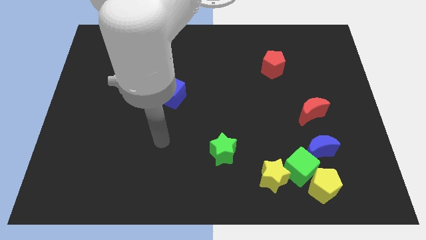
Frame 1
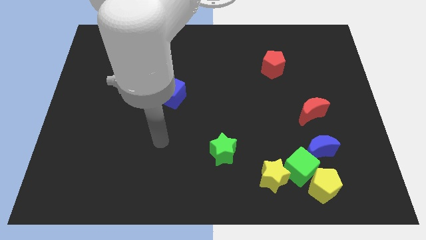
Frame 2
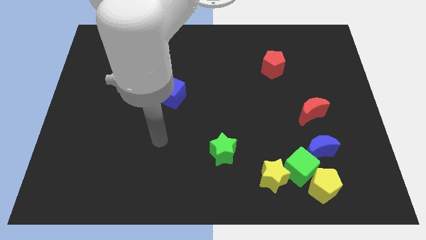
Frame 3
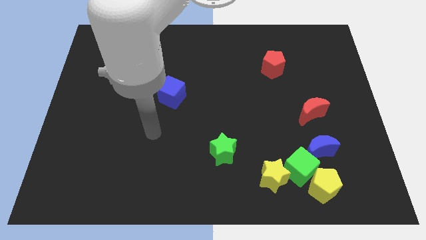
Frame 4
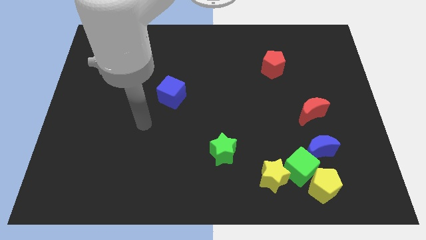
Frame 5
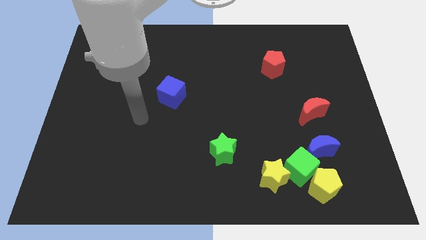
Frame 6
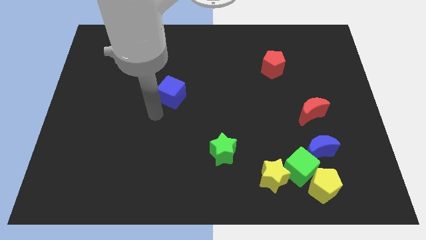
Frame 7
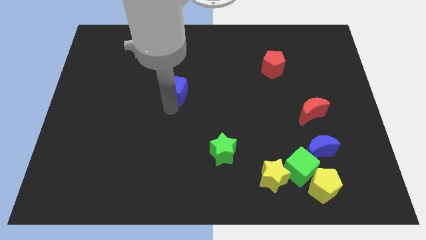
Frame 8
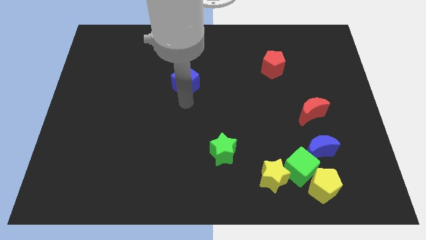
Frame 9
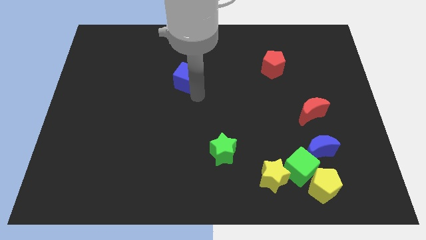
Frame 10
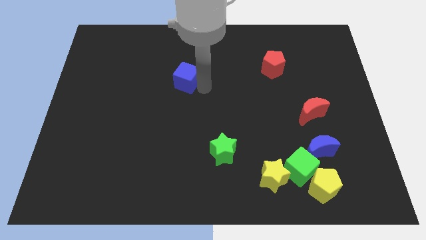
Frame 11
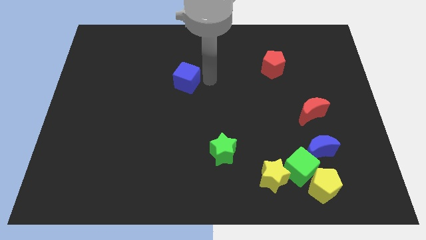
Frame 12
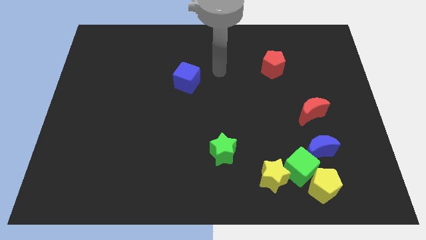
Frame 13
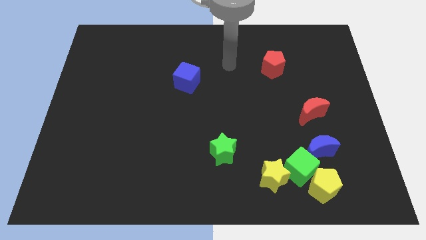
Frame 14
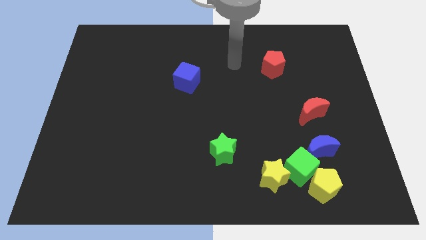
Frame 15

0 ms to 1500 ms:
push the blue cube slightly upwards

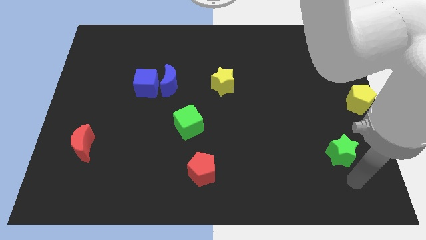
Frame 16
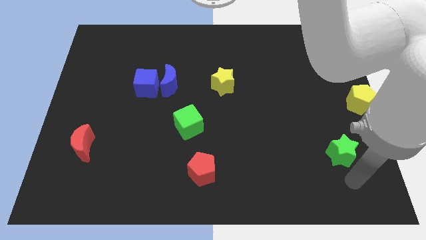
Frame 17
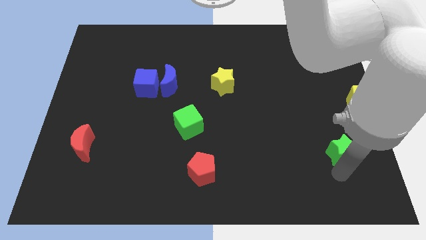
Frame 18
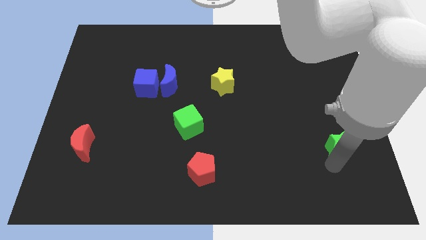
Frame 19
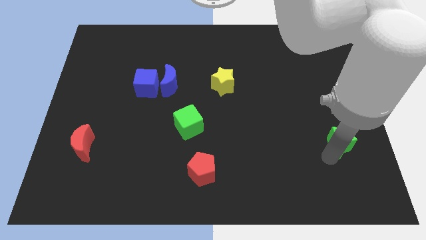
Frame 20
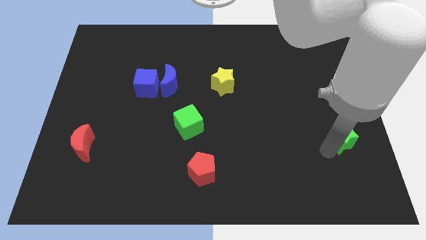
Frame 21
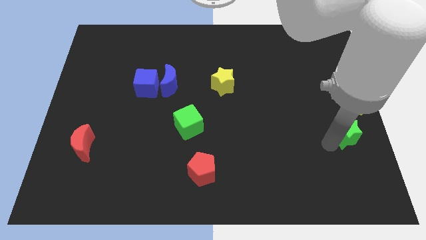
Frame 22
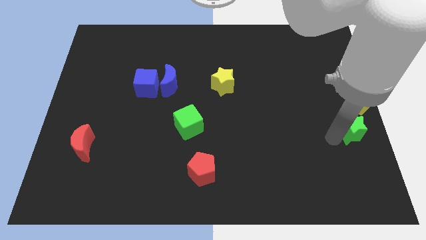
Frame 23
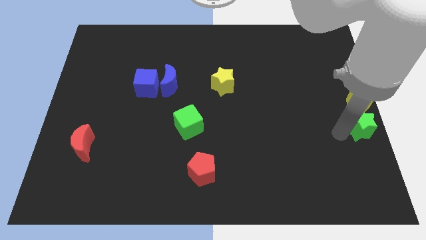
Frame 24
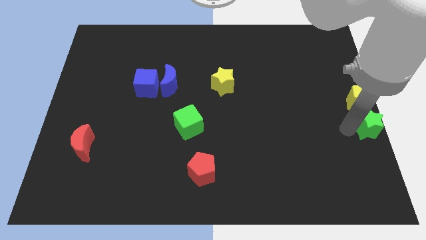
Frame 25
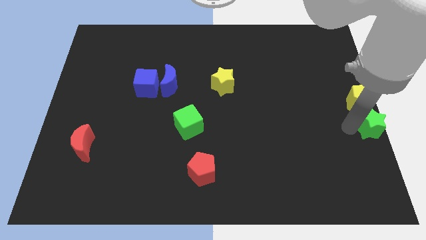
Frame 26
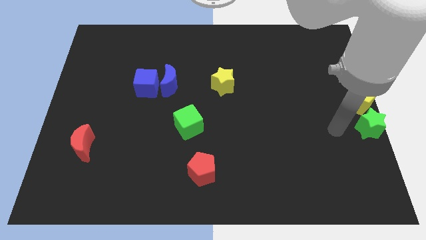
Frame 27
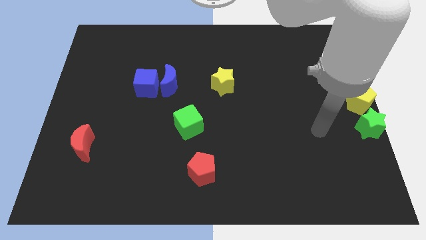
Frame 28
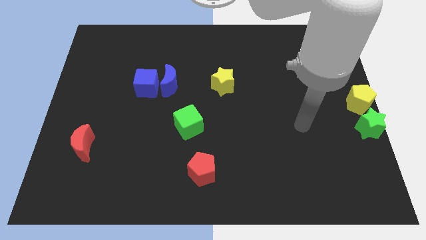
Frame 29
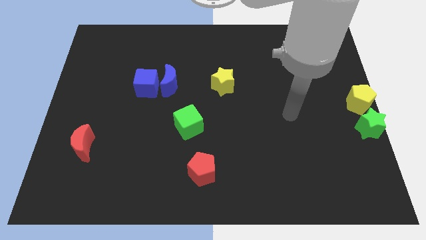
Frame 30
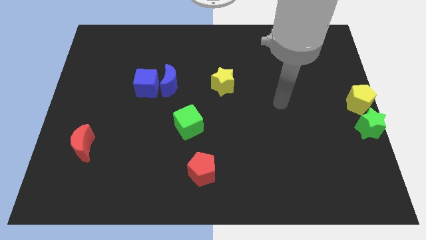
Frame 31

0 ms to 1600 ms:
push green star close to yellow pentagon

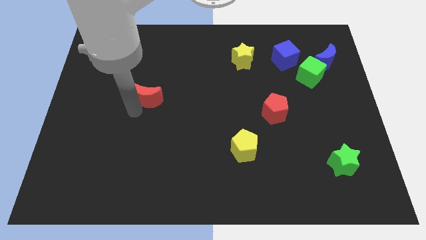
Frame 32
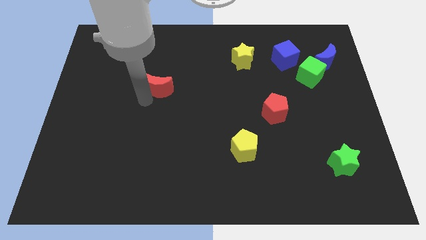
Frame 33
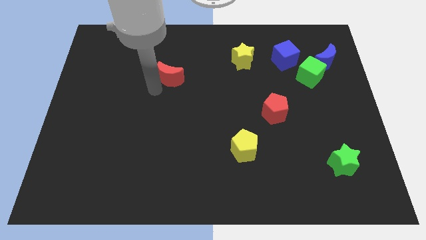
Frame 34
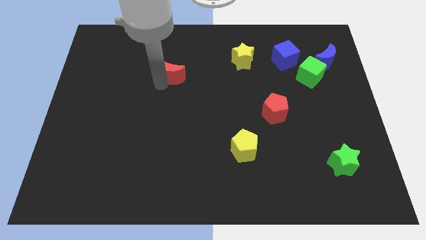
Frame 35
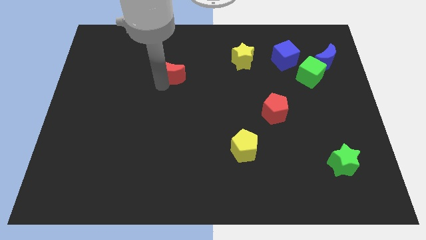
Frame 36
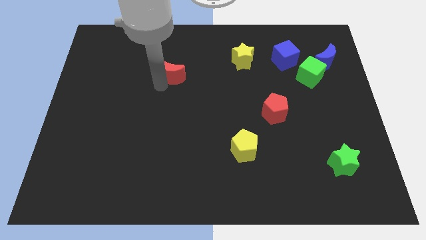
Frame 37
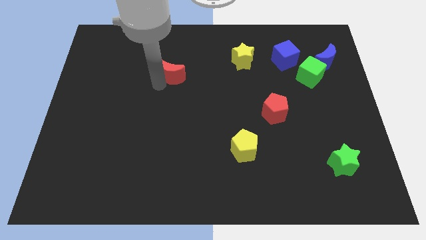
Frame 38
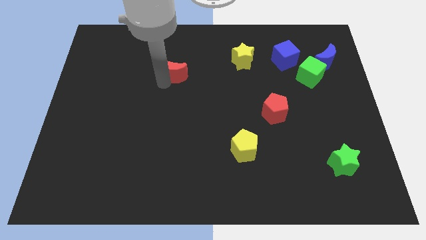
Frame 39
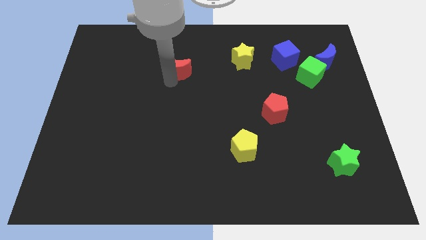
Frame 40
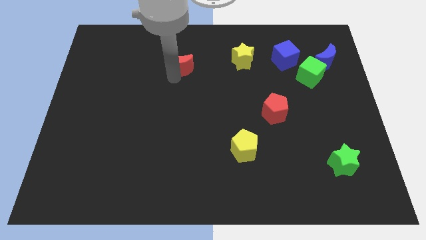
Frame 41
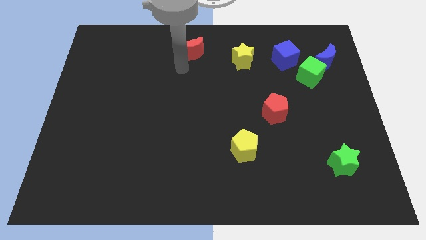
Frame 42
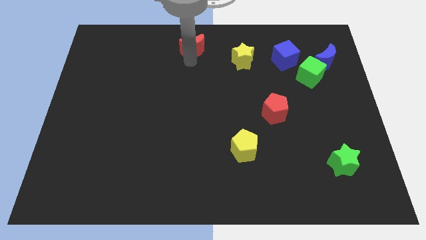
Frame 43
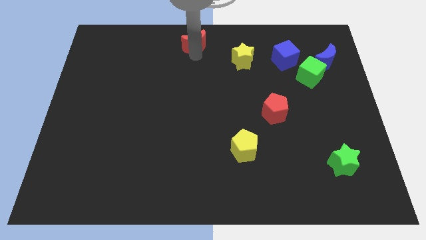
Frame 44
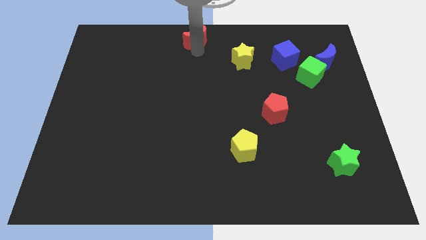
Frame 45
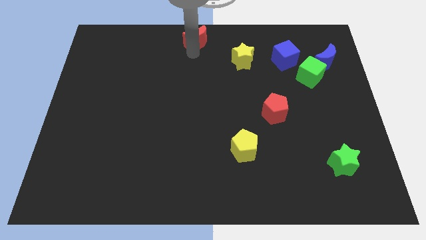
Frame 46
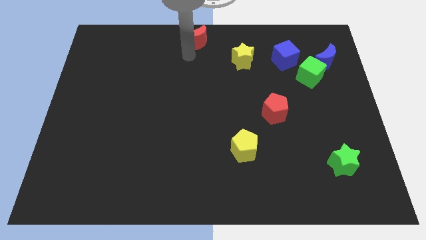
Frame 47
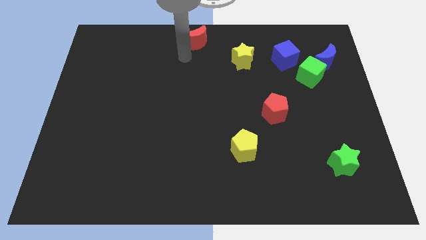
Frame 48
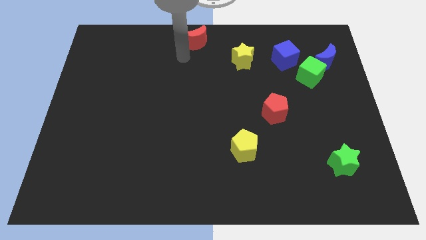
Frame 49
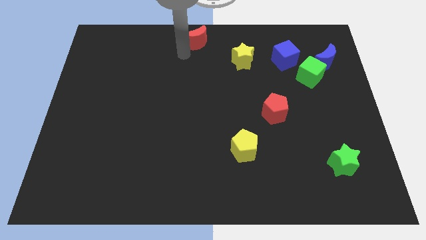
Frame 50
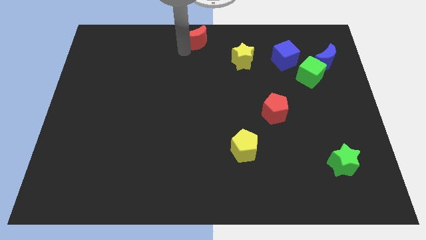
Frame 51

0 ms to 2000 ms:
put the red moon at the top center of the board

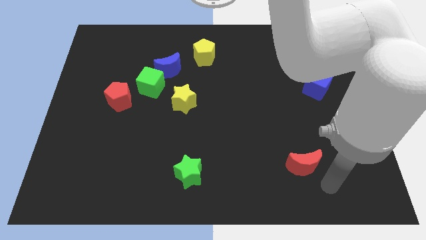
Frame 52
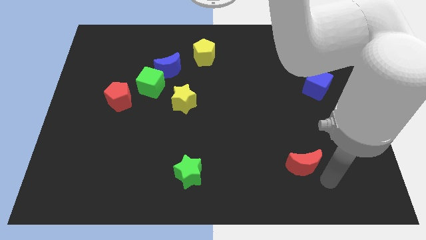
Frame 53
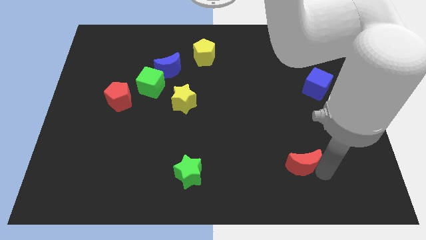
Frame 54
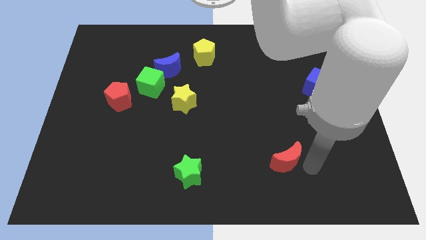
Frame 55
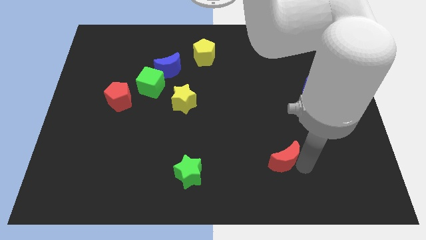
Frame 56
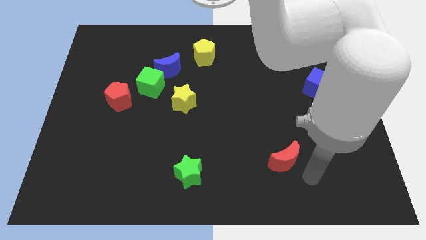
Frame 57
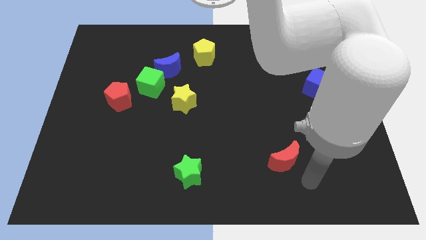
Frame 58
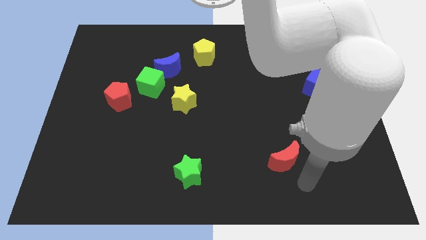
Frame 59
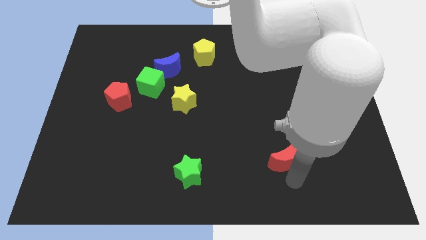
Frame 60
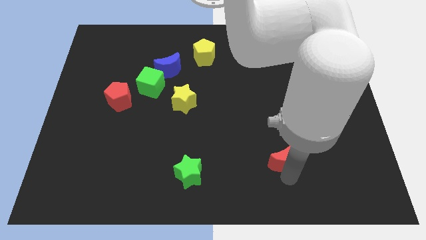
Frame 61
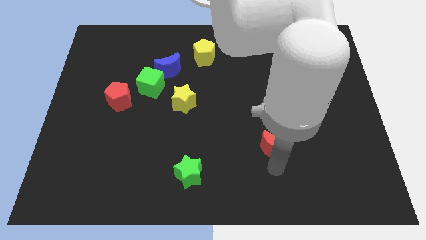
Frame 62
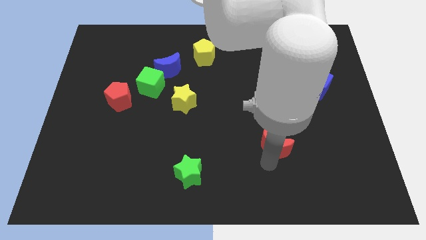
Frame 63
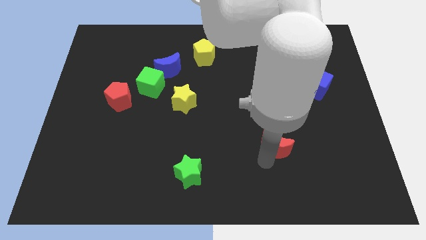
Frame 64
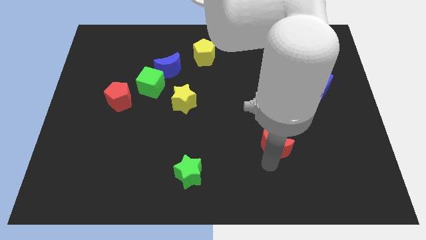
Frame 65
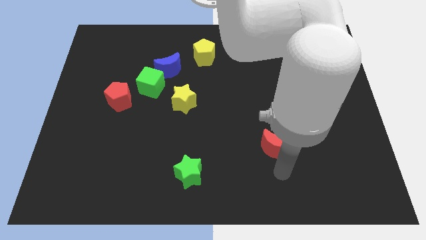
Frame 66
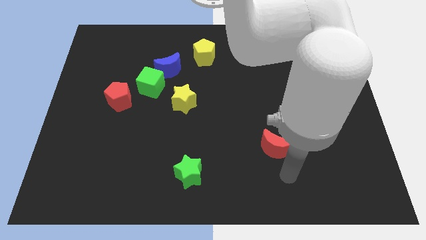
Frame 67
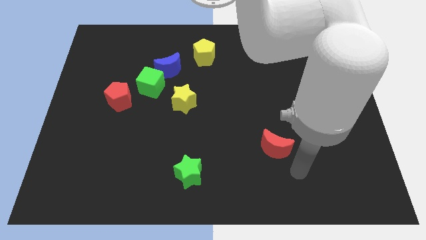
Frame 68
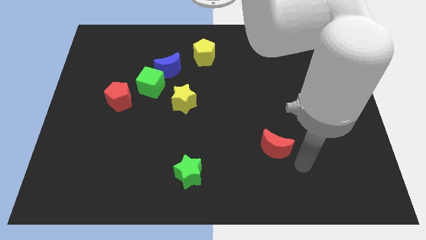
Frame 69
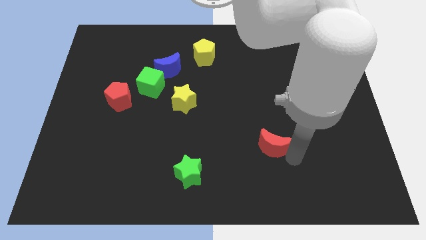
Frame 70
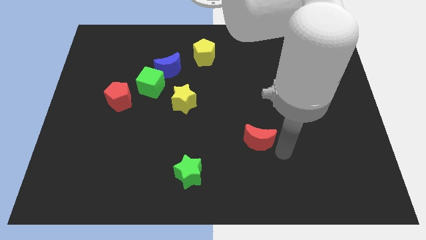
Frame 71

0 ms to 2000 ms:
slightly move the red moon towards up

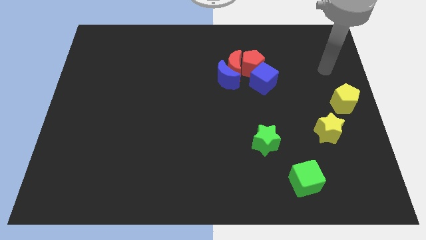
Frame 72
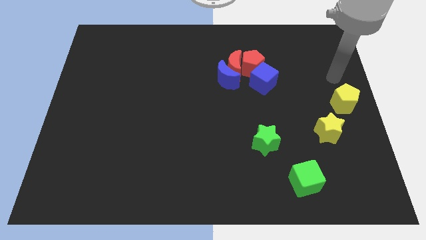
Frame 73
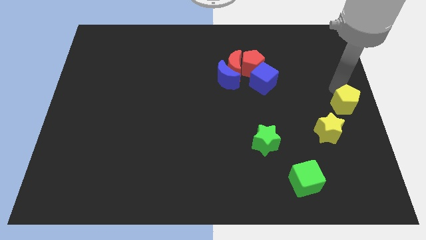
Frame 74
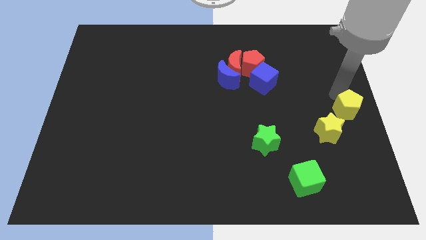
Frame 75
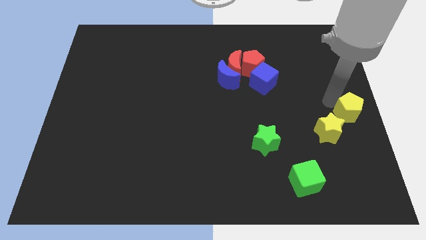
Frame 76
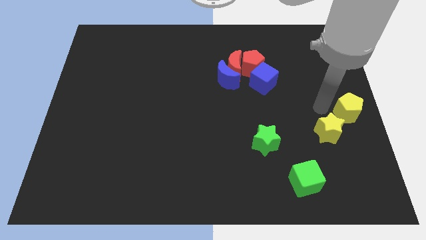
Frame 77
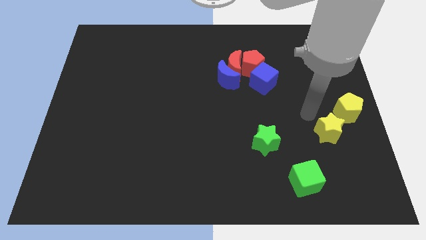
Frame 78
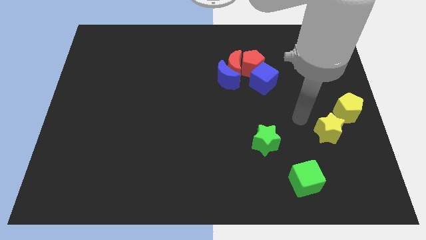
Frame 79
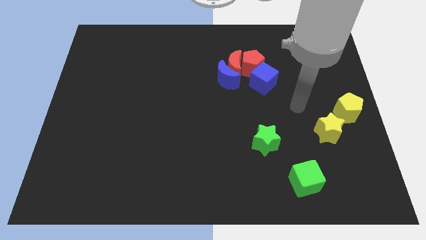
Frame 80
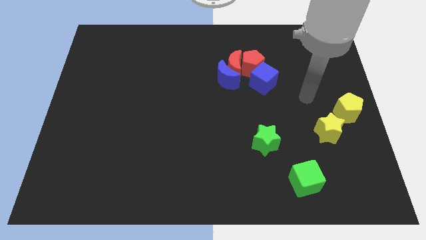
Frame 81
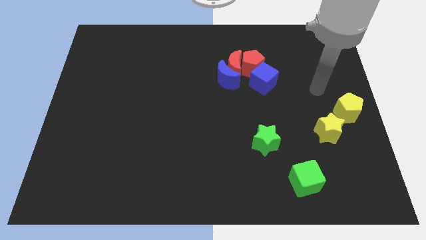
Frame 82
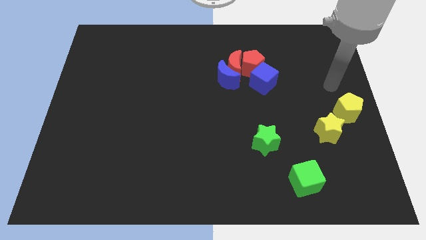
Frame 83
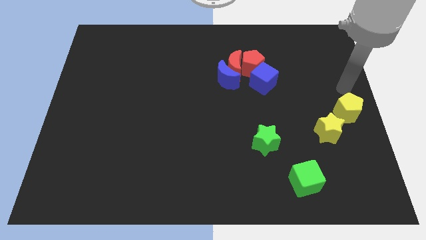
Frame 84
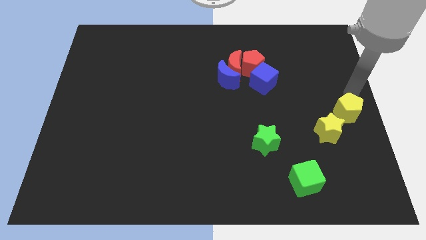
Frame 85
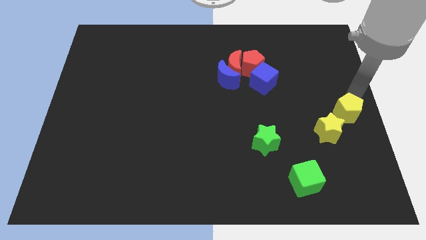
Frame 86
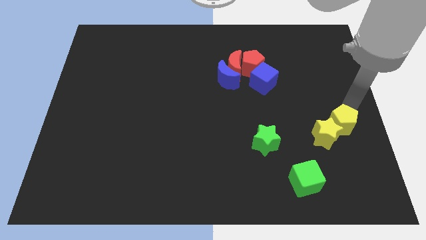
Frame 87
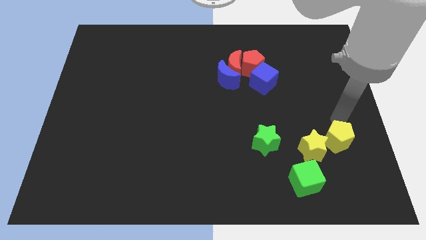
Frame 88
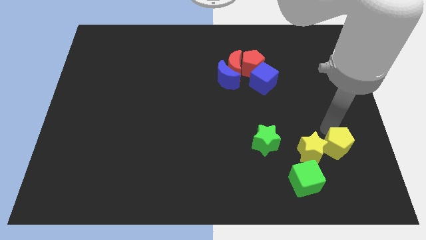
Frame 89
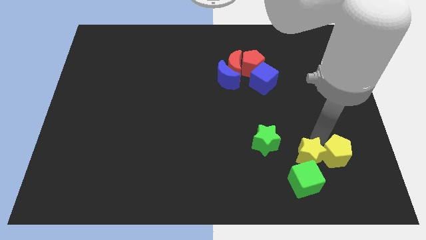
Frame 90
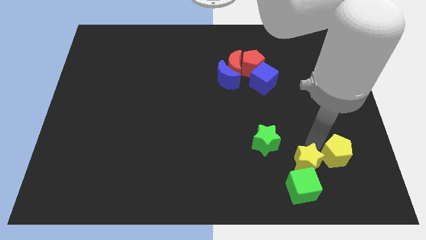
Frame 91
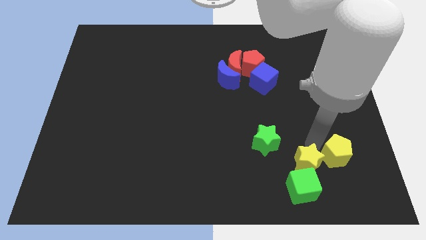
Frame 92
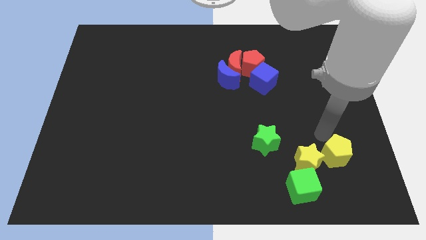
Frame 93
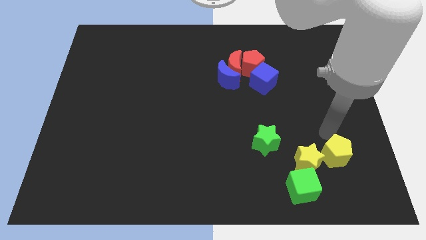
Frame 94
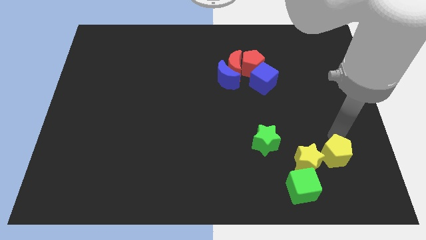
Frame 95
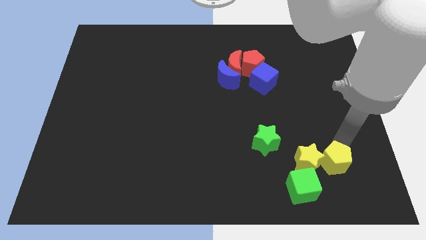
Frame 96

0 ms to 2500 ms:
push the yellow blocks towards the green cube
